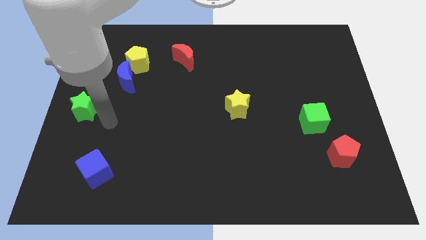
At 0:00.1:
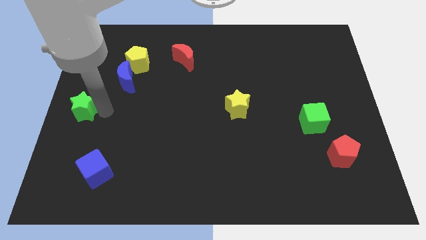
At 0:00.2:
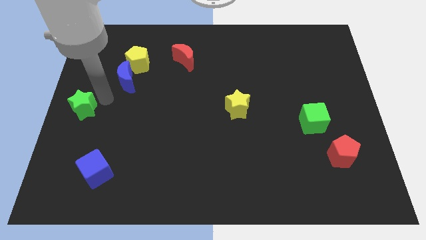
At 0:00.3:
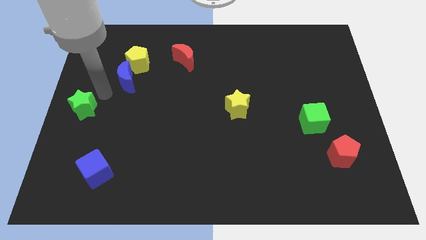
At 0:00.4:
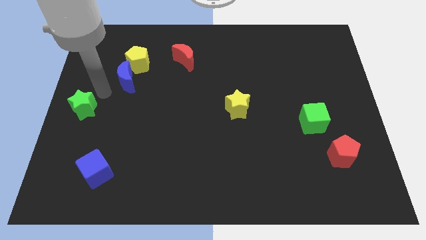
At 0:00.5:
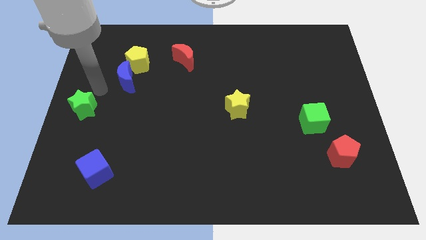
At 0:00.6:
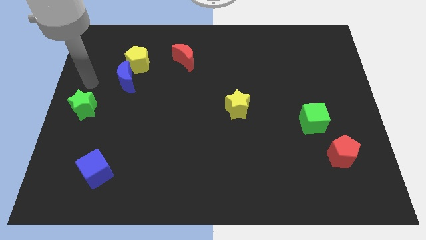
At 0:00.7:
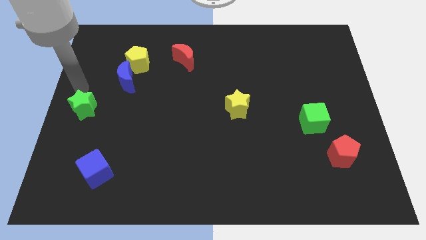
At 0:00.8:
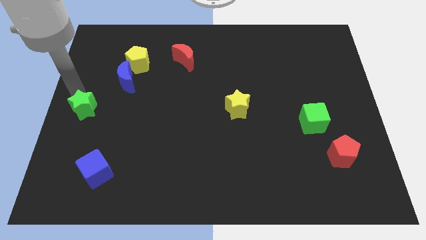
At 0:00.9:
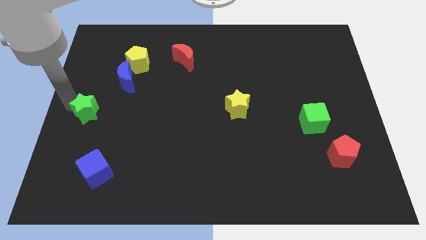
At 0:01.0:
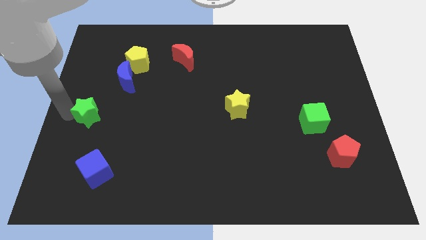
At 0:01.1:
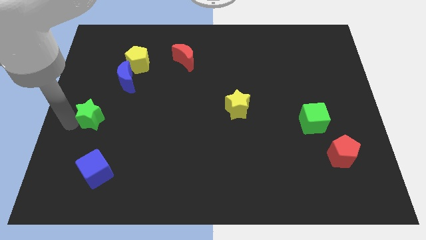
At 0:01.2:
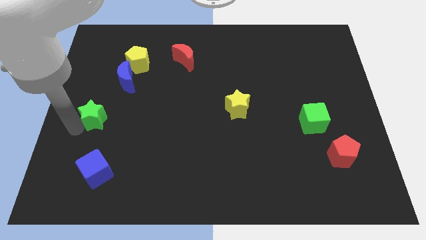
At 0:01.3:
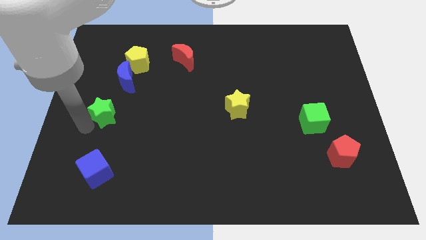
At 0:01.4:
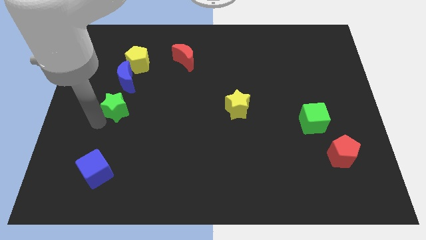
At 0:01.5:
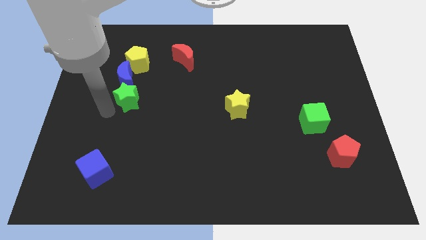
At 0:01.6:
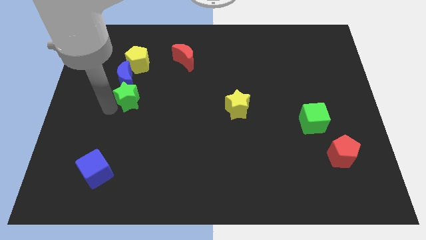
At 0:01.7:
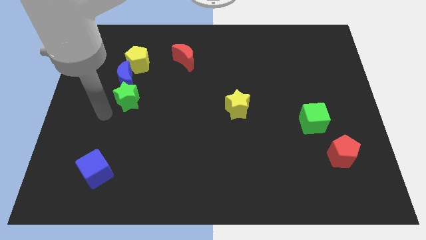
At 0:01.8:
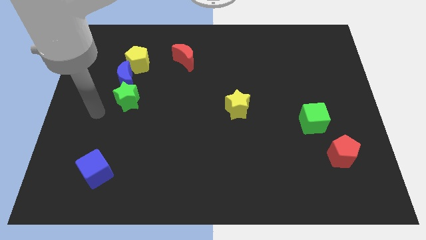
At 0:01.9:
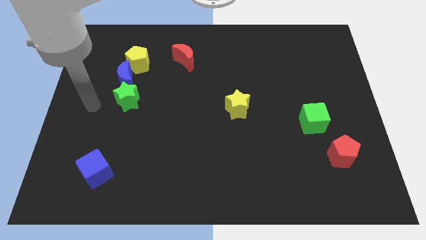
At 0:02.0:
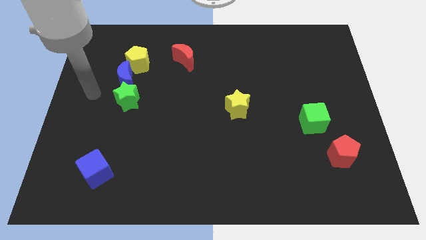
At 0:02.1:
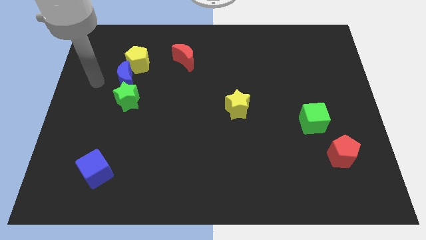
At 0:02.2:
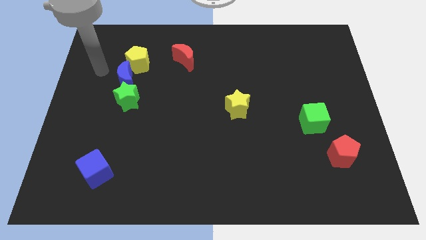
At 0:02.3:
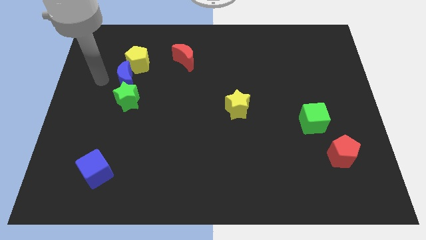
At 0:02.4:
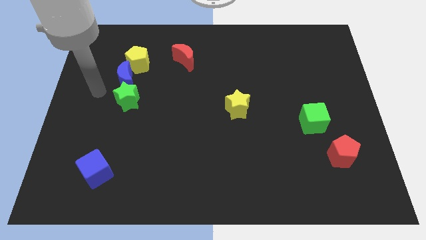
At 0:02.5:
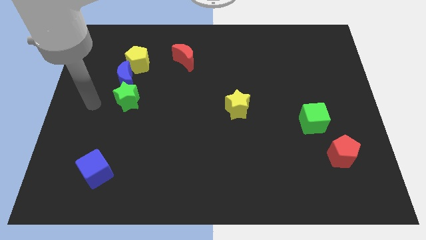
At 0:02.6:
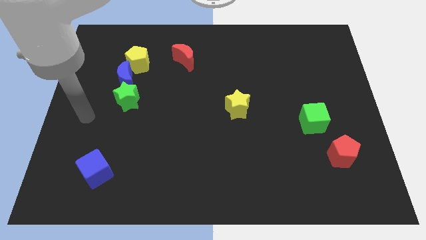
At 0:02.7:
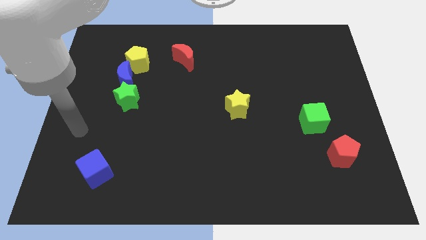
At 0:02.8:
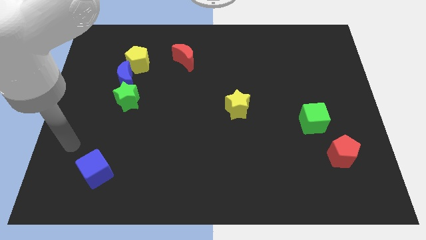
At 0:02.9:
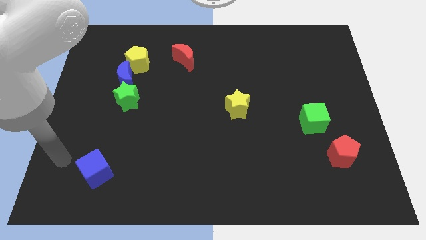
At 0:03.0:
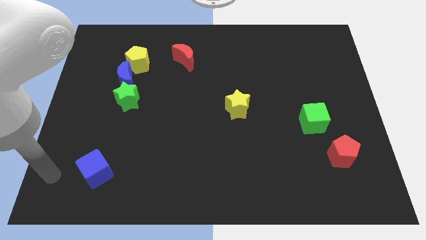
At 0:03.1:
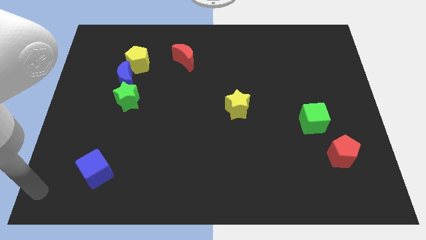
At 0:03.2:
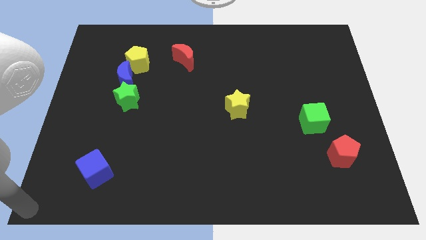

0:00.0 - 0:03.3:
place the green star below the blue crescent

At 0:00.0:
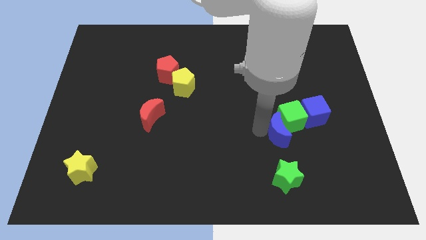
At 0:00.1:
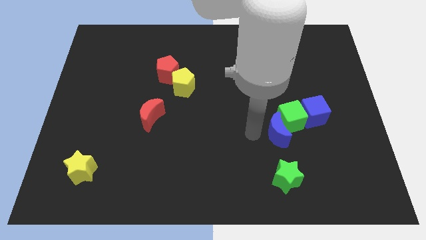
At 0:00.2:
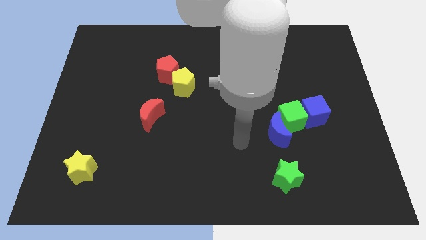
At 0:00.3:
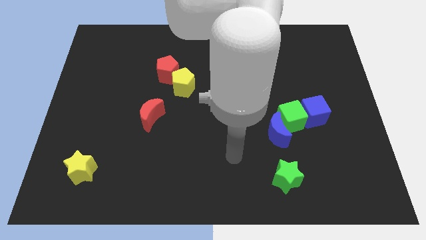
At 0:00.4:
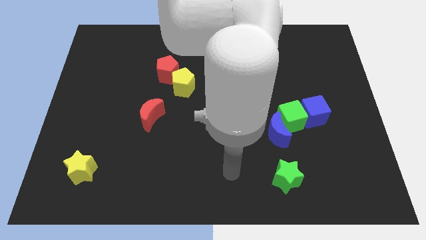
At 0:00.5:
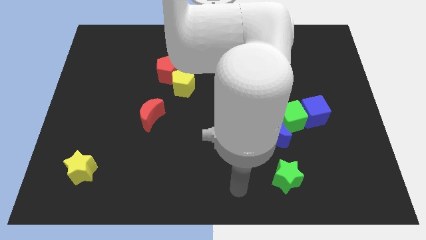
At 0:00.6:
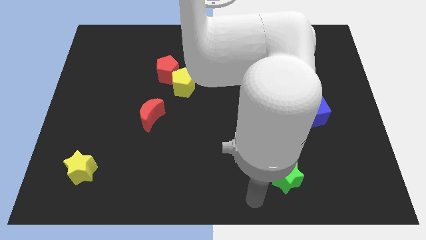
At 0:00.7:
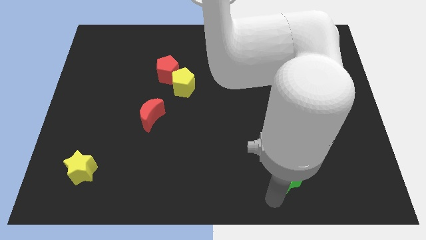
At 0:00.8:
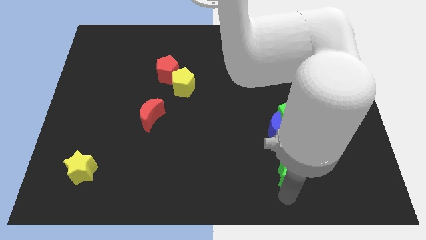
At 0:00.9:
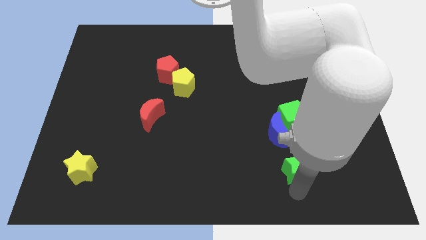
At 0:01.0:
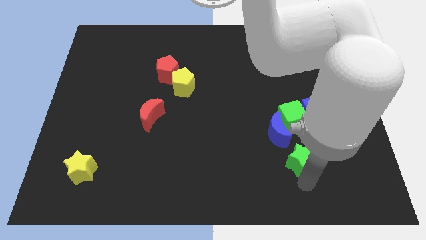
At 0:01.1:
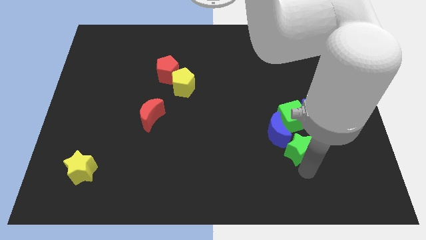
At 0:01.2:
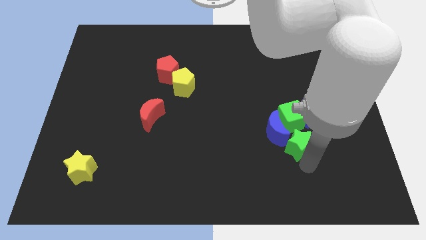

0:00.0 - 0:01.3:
move the green star at the bottom right side of blue moon

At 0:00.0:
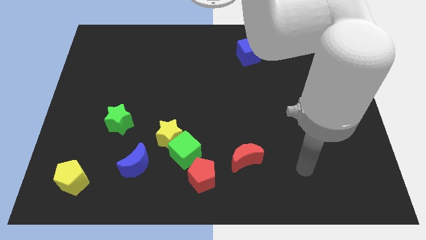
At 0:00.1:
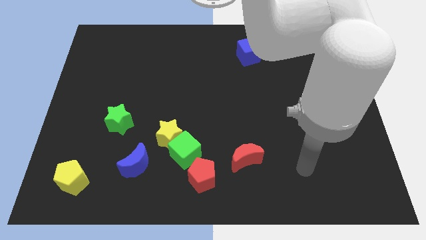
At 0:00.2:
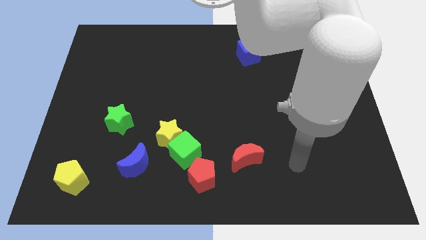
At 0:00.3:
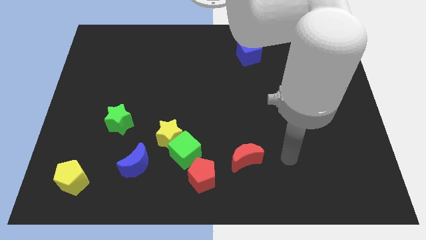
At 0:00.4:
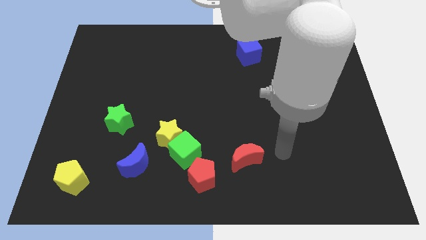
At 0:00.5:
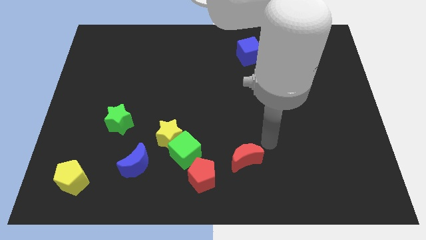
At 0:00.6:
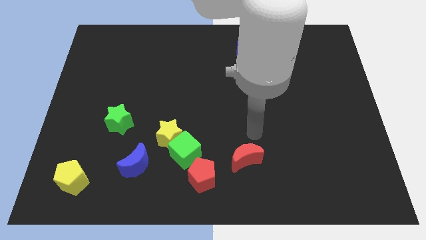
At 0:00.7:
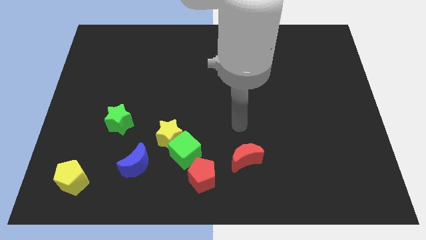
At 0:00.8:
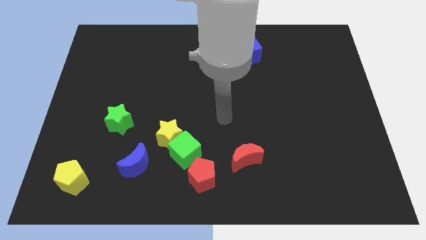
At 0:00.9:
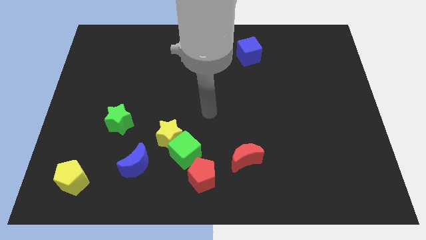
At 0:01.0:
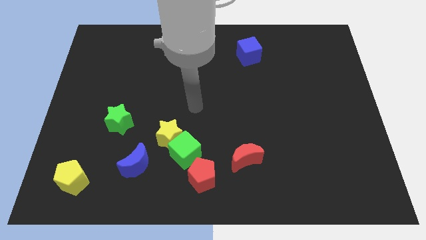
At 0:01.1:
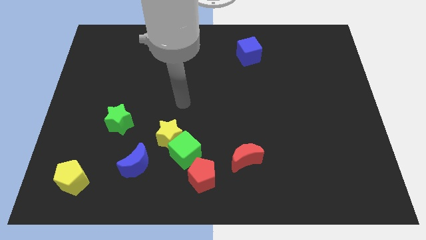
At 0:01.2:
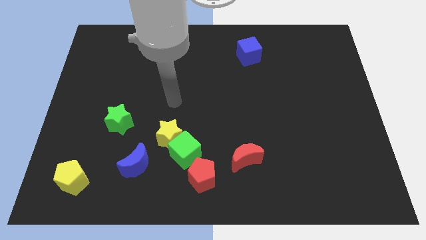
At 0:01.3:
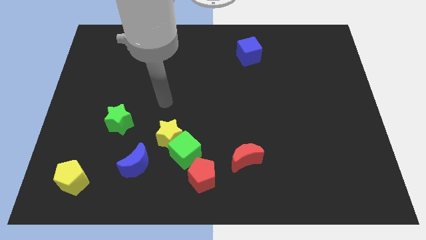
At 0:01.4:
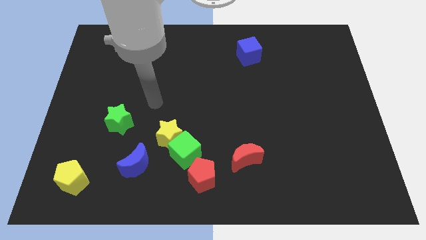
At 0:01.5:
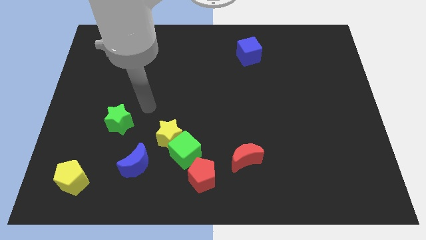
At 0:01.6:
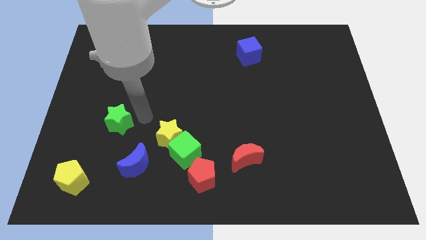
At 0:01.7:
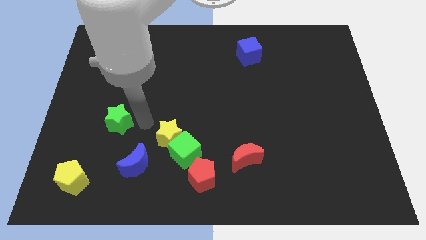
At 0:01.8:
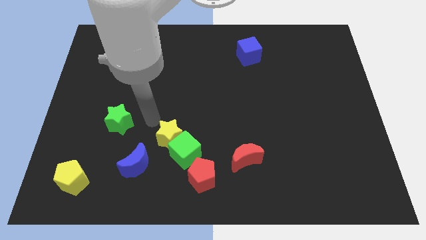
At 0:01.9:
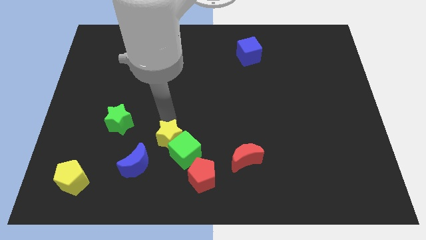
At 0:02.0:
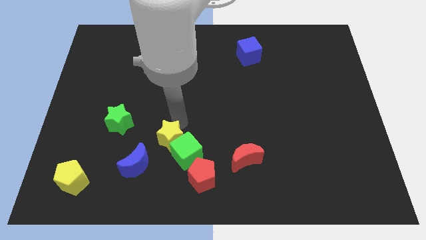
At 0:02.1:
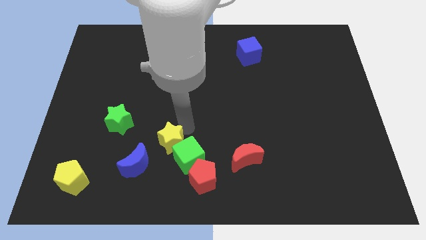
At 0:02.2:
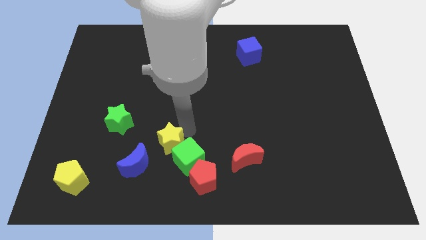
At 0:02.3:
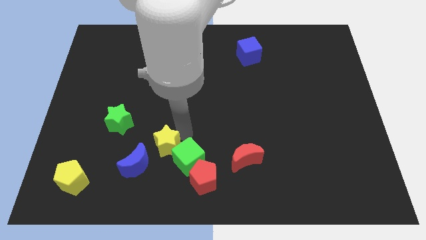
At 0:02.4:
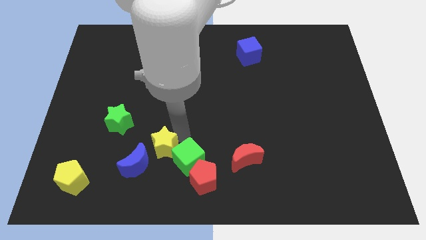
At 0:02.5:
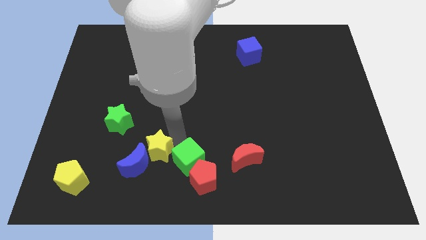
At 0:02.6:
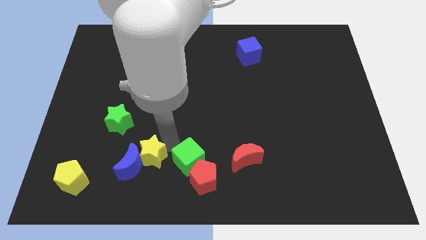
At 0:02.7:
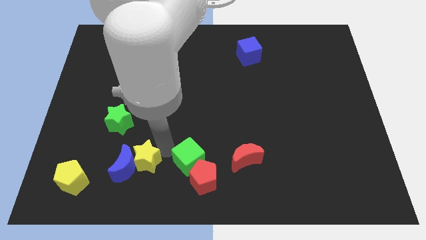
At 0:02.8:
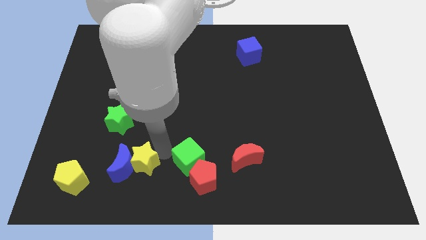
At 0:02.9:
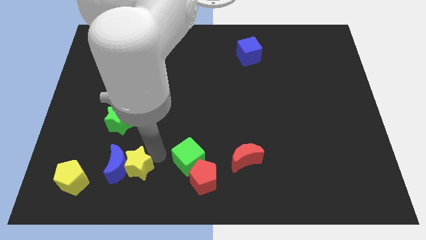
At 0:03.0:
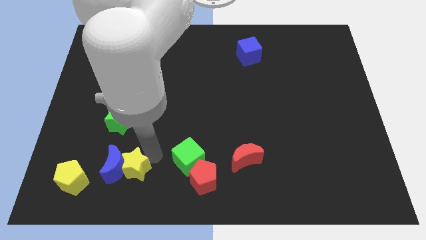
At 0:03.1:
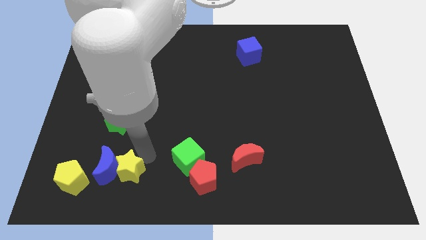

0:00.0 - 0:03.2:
separate the yellow star from the green cube

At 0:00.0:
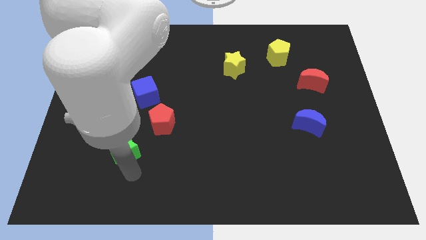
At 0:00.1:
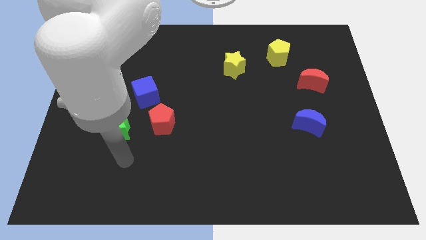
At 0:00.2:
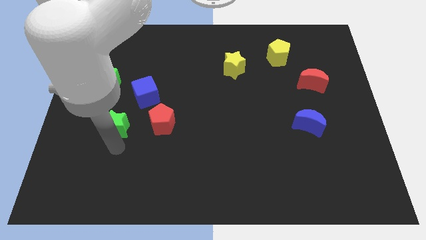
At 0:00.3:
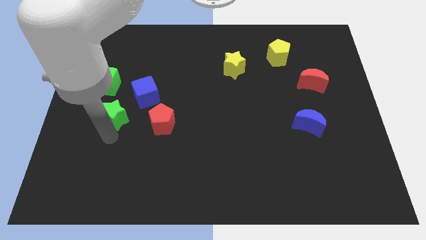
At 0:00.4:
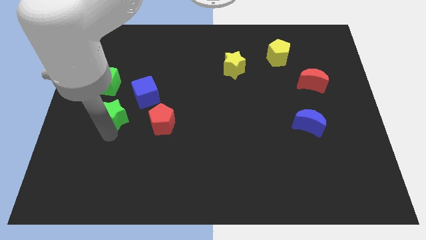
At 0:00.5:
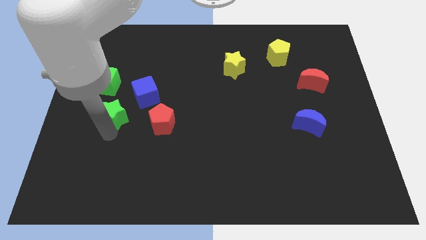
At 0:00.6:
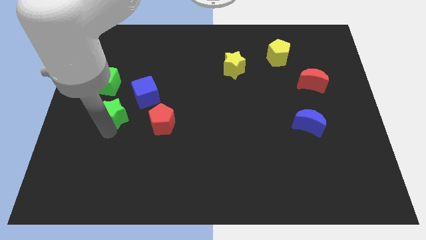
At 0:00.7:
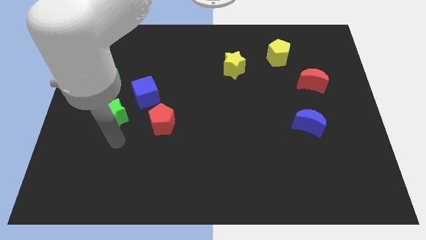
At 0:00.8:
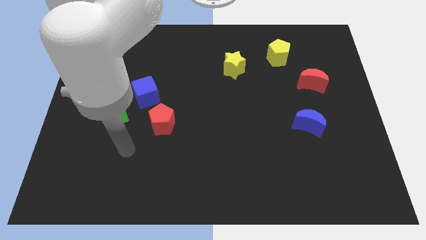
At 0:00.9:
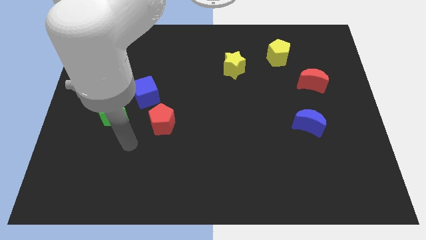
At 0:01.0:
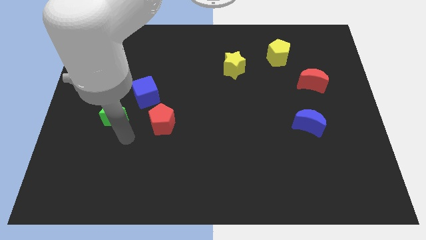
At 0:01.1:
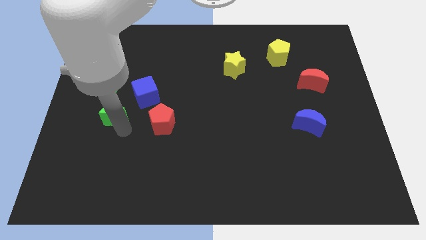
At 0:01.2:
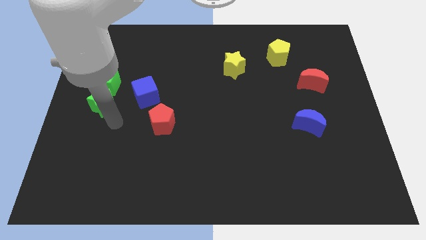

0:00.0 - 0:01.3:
drag the green star vertically at the bottom of the green cube
